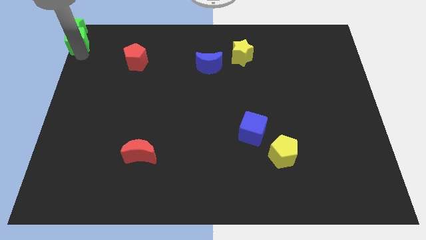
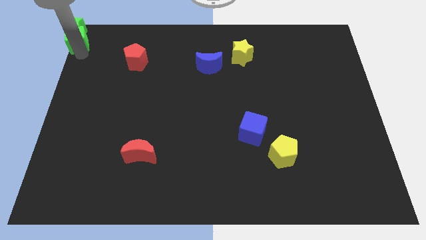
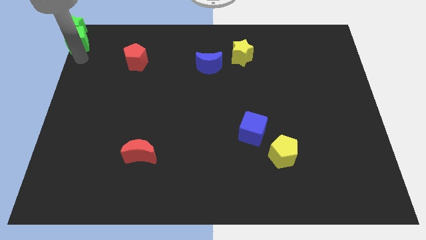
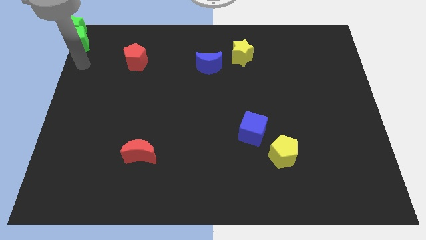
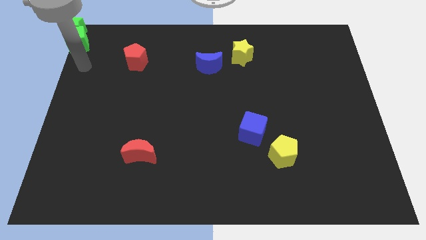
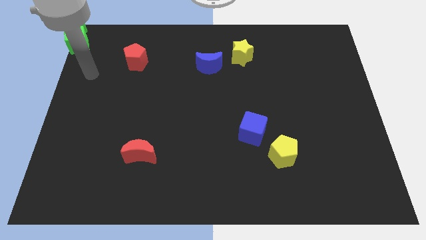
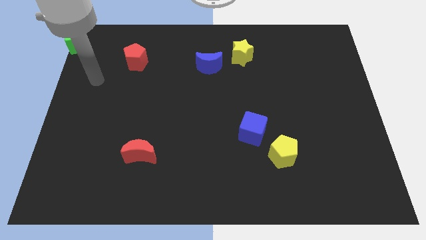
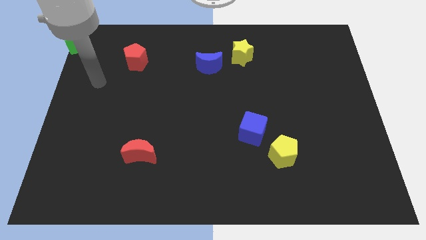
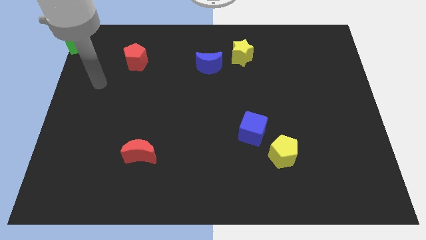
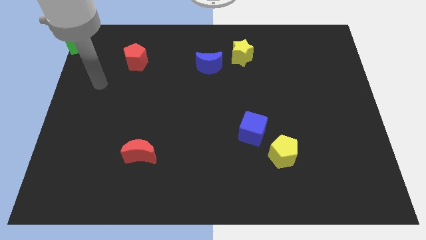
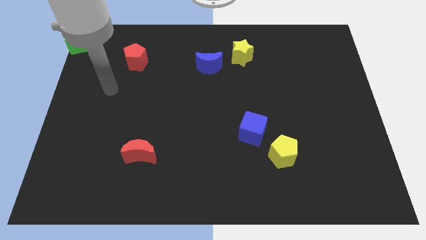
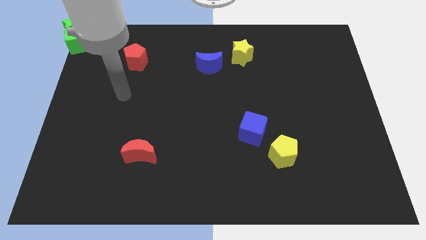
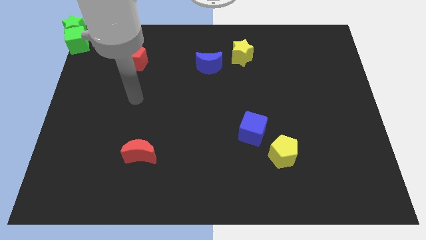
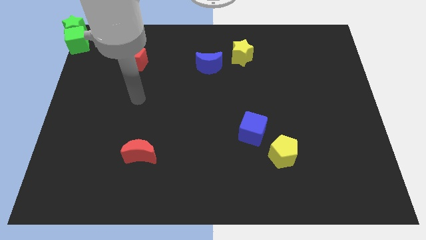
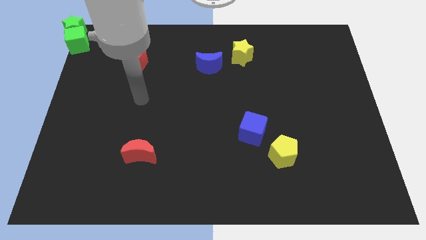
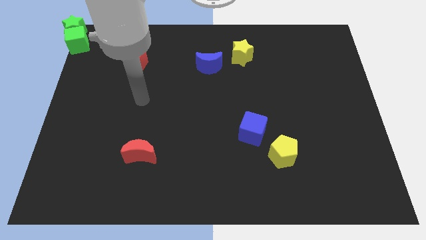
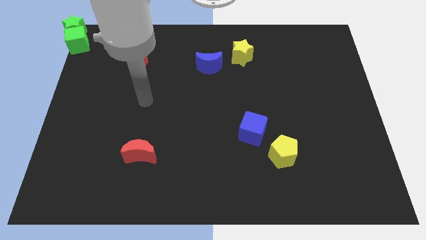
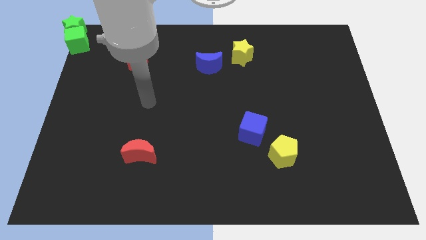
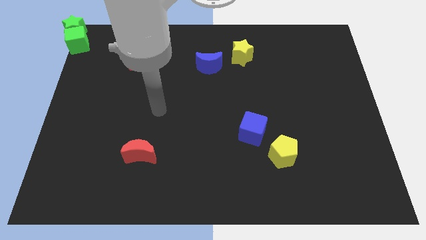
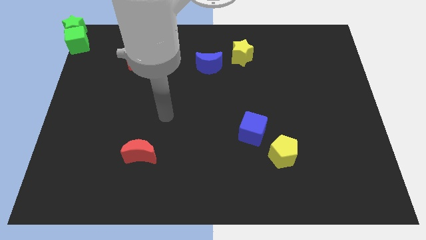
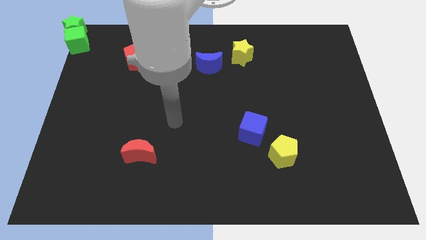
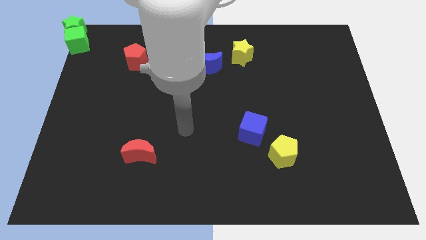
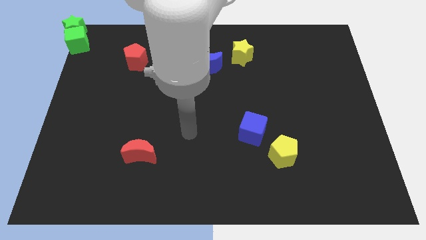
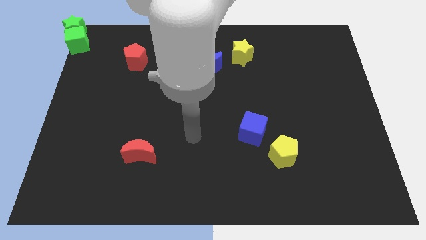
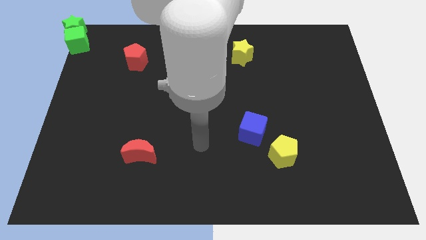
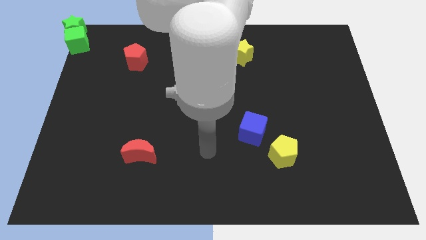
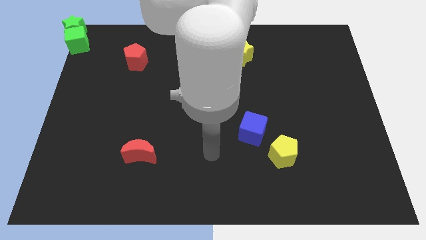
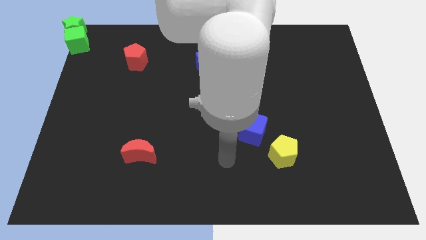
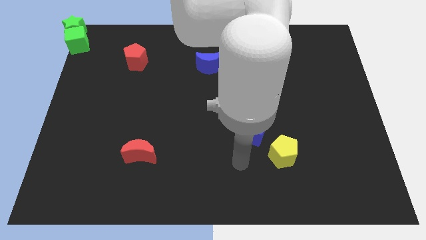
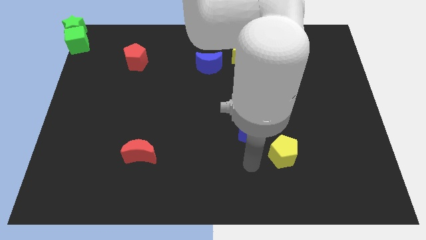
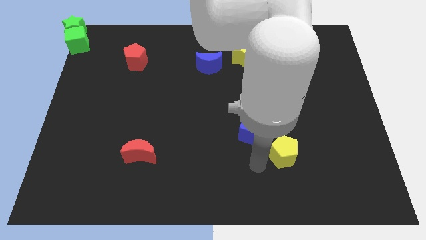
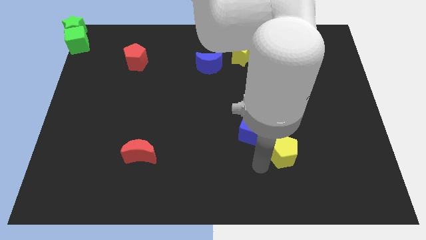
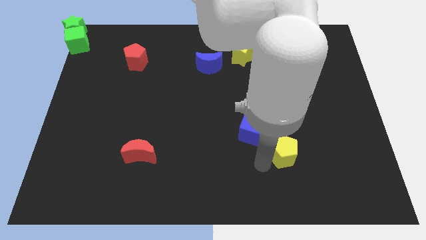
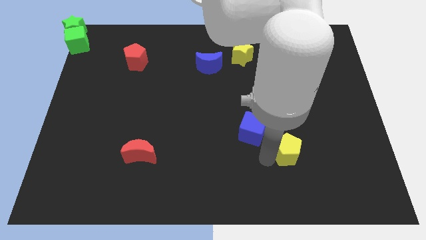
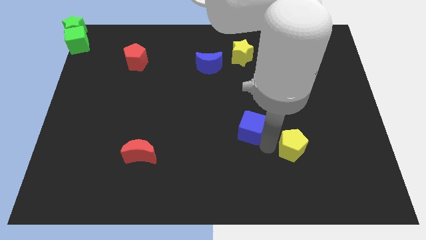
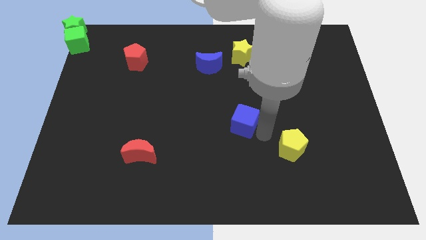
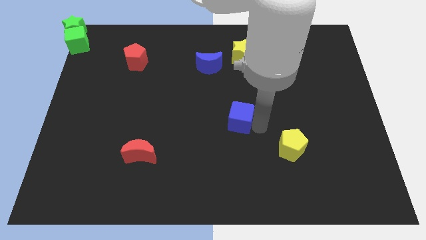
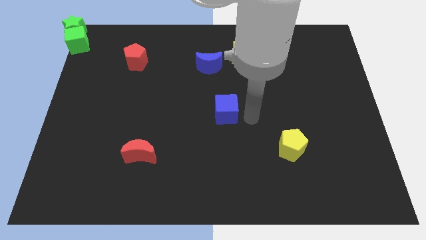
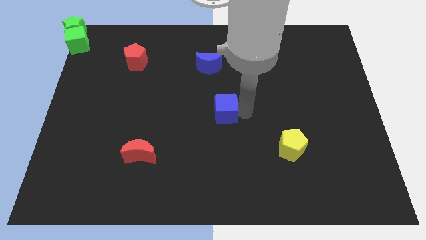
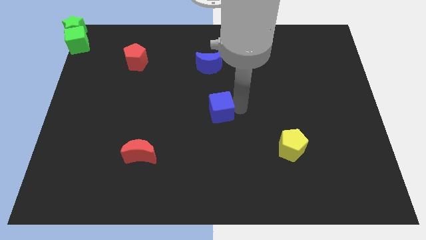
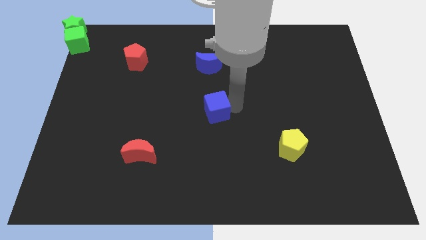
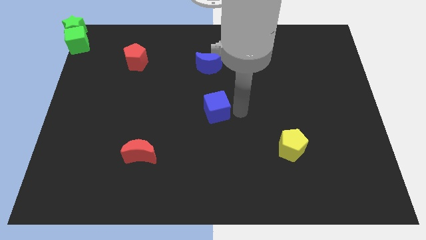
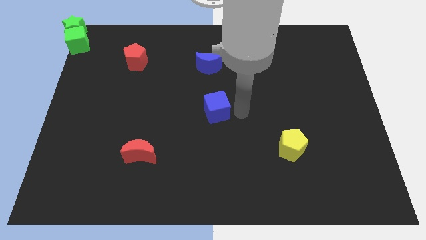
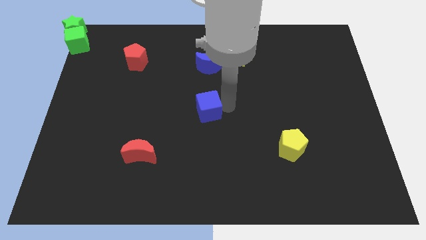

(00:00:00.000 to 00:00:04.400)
place the blue block to the center of the board

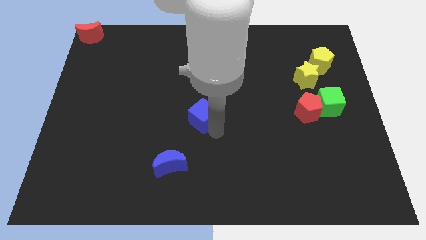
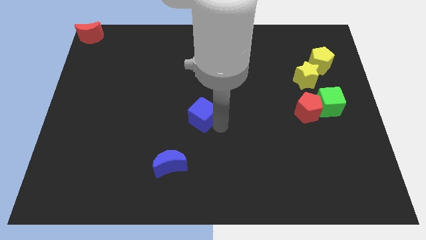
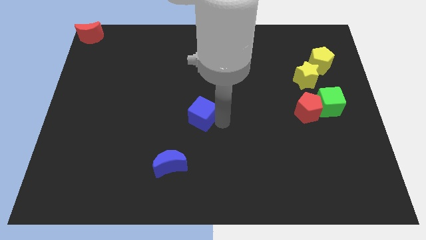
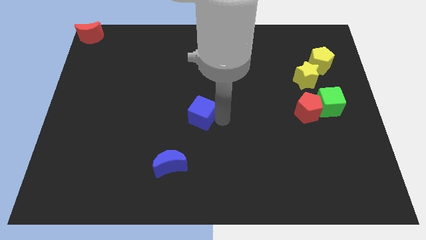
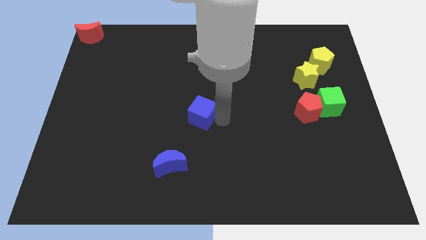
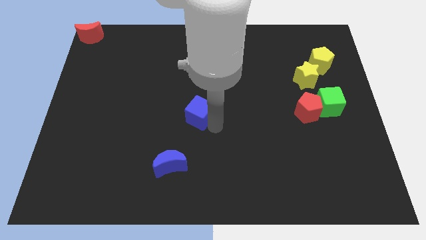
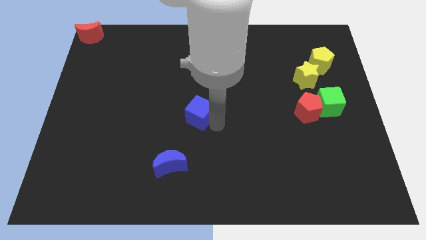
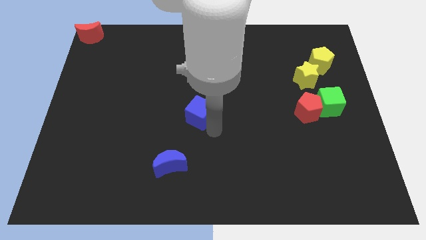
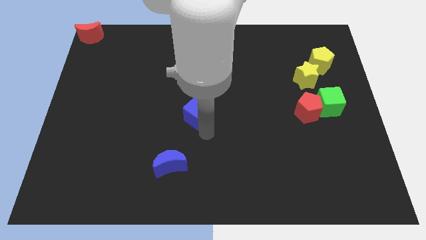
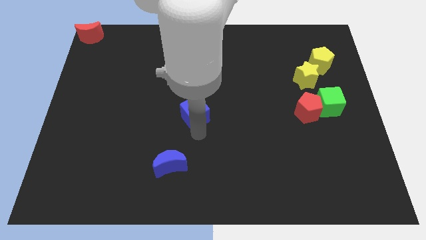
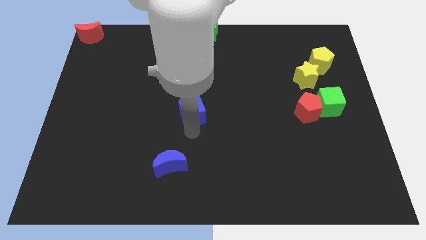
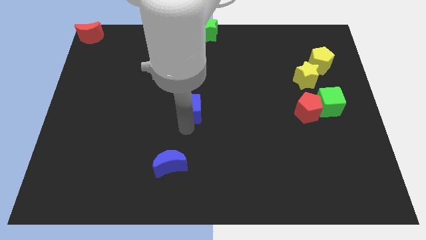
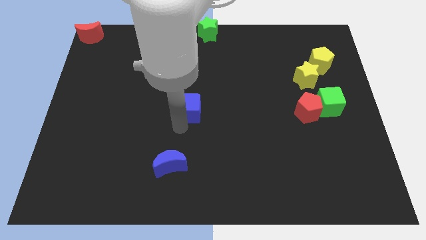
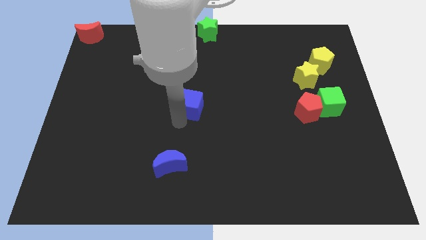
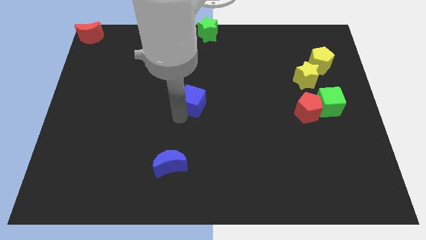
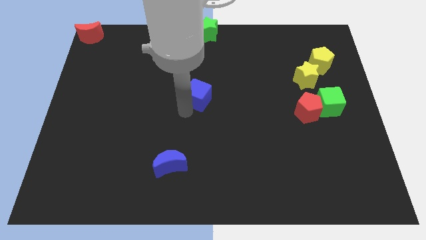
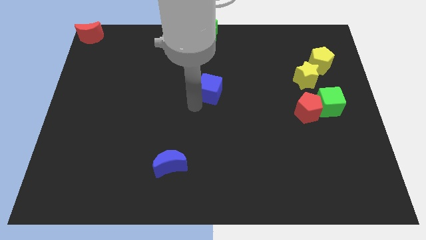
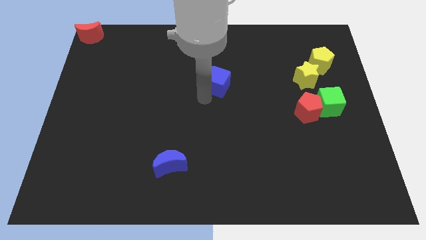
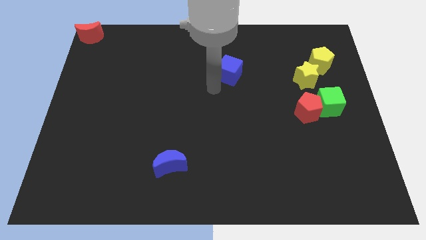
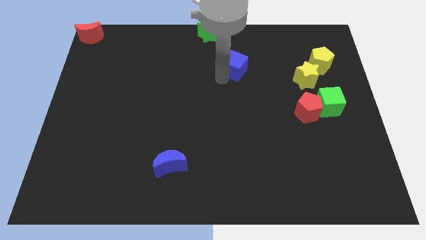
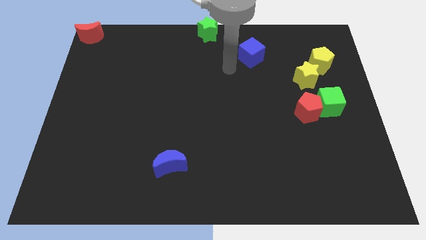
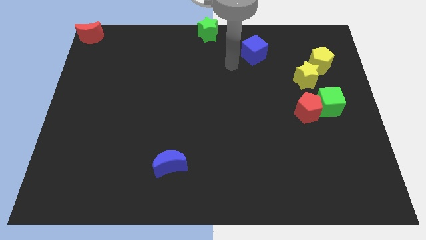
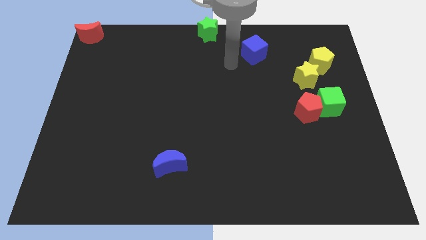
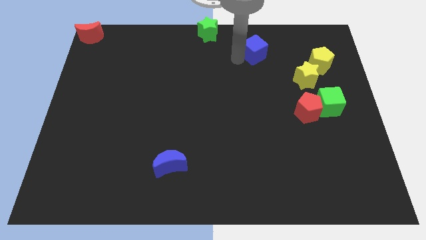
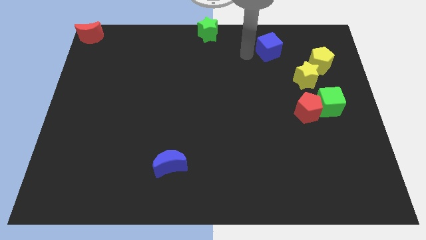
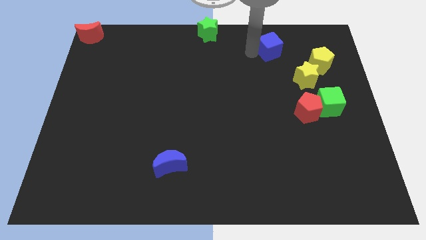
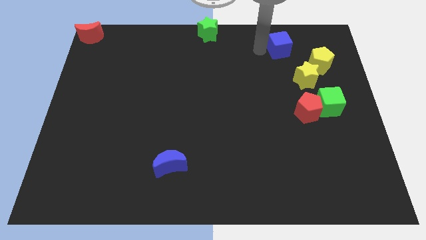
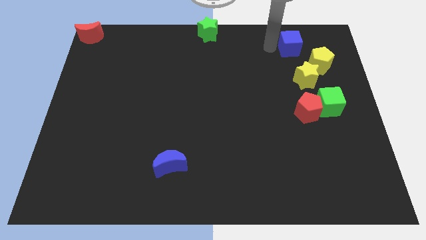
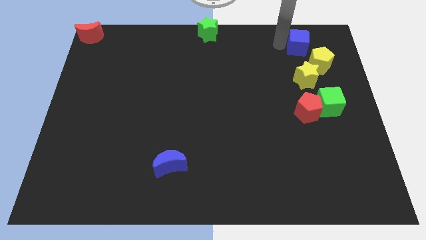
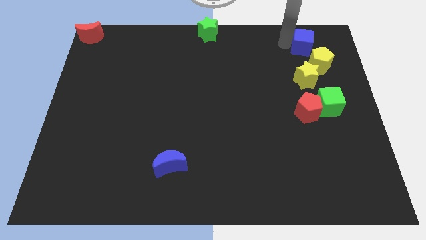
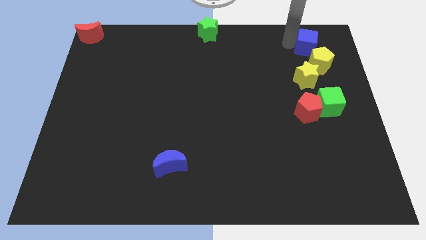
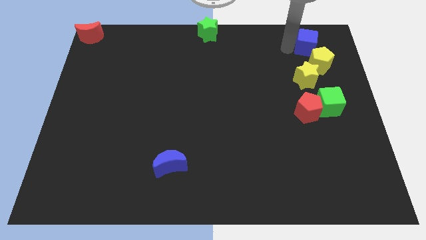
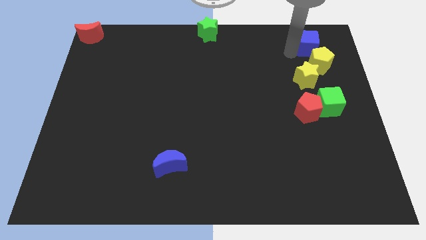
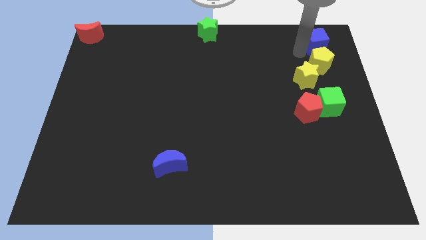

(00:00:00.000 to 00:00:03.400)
place blue cube to the top of yellow pentagon

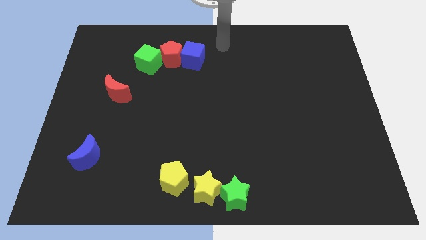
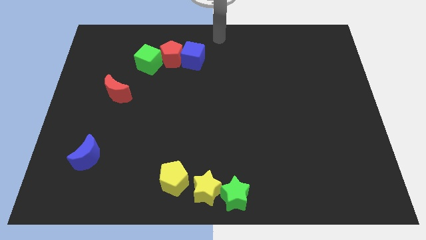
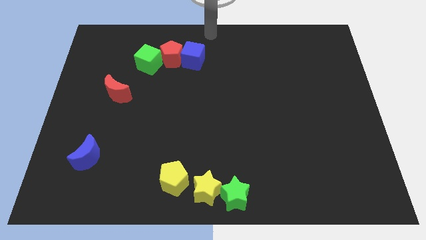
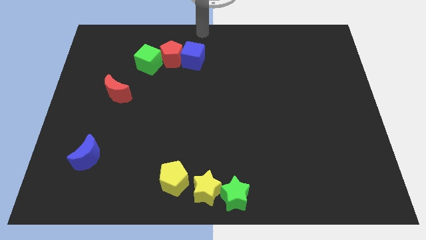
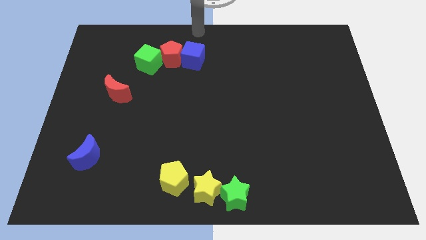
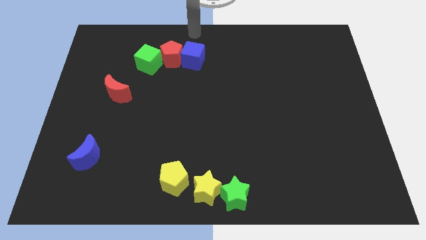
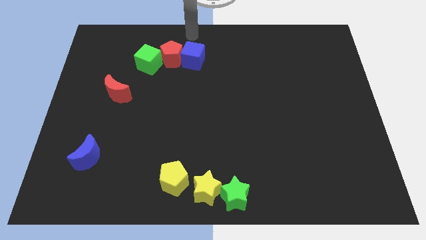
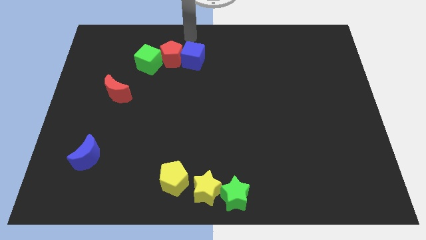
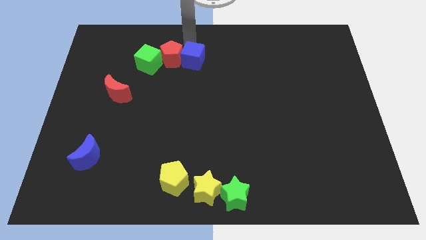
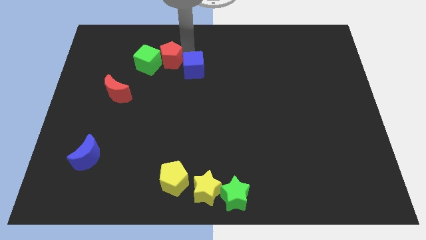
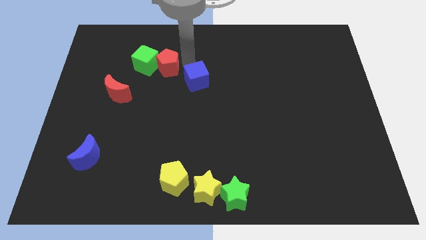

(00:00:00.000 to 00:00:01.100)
separate the blue cube from the red pentagon
